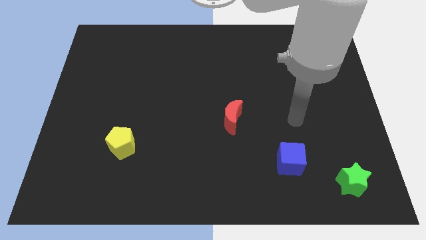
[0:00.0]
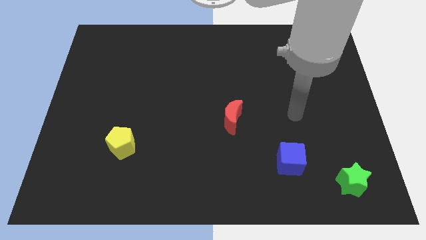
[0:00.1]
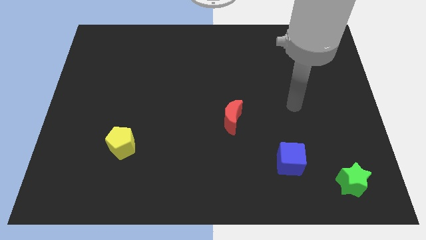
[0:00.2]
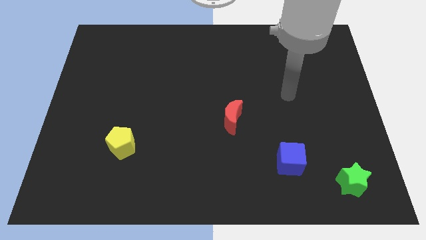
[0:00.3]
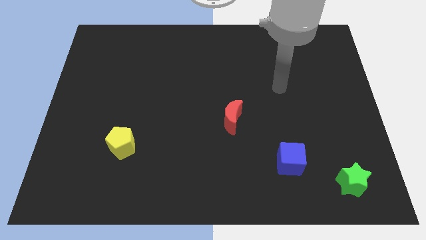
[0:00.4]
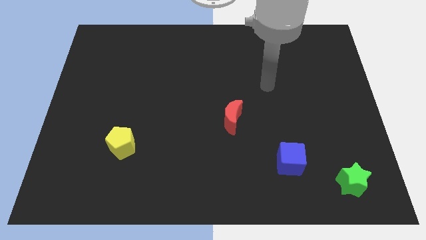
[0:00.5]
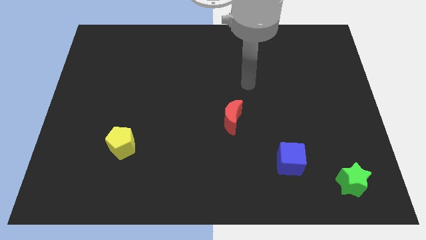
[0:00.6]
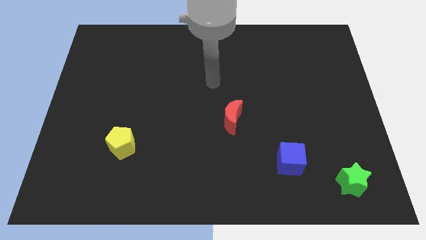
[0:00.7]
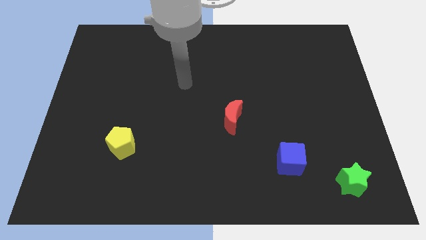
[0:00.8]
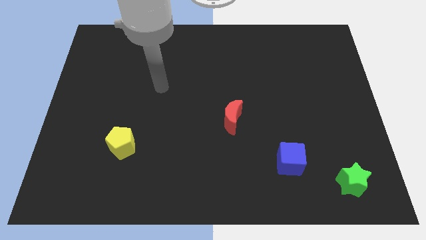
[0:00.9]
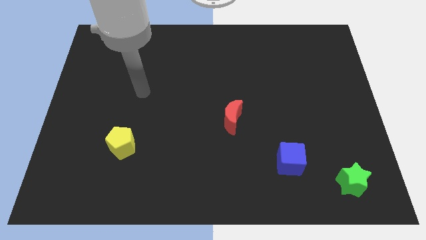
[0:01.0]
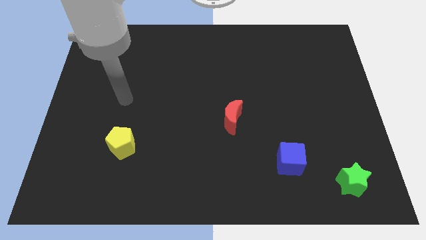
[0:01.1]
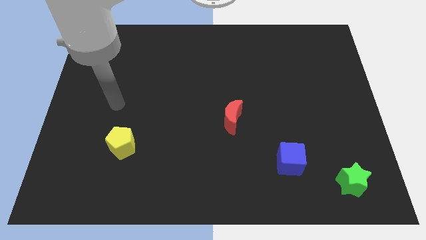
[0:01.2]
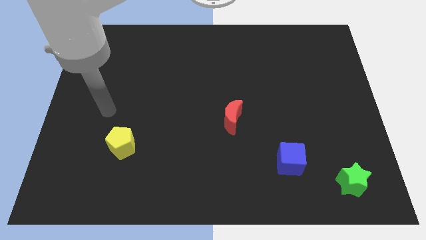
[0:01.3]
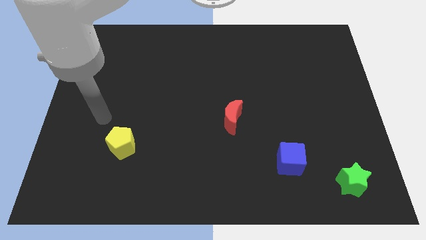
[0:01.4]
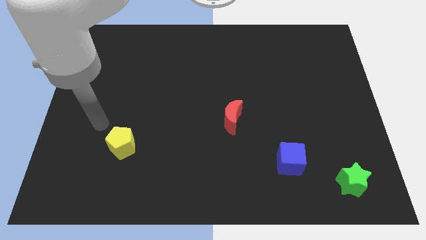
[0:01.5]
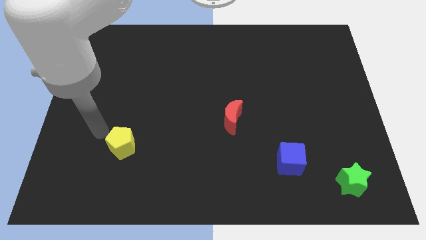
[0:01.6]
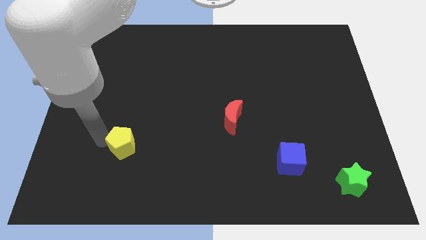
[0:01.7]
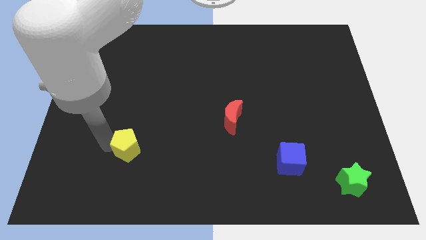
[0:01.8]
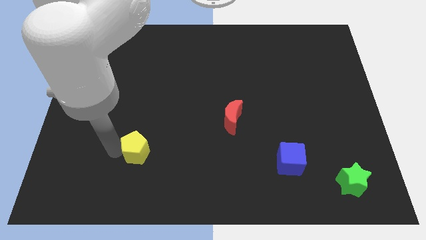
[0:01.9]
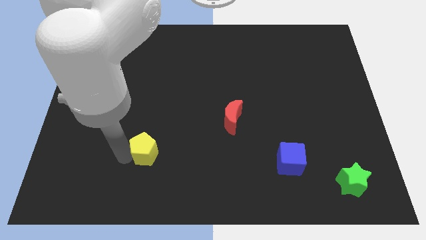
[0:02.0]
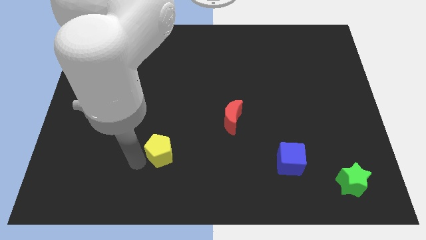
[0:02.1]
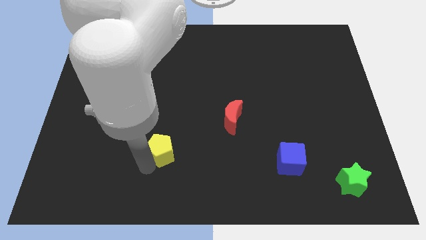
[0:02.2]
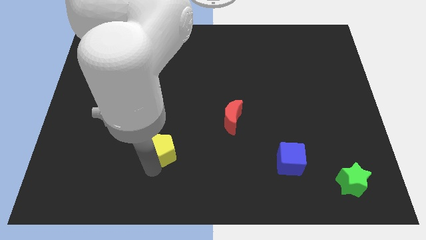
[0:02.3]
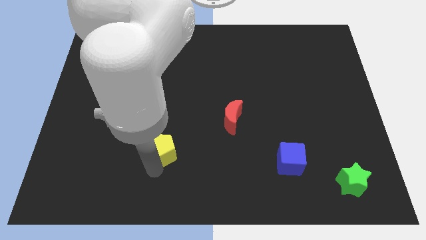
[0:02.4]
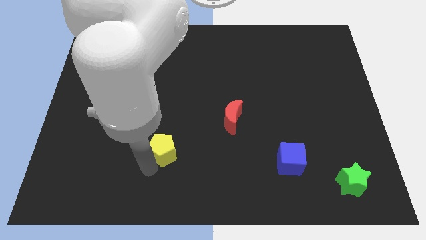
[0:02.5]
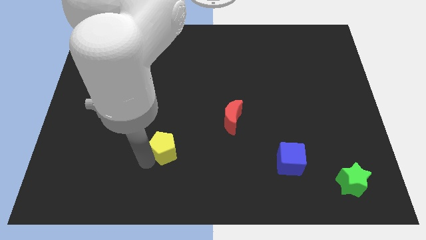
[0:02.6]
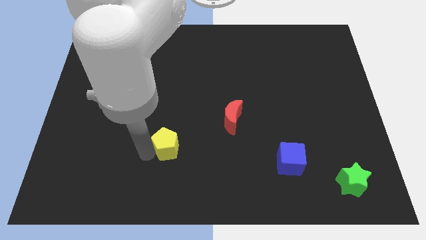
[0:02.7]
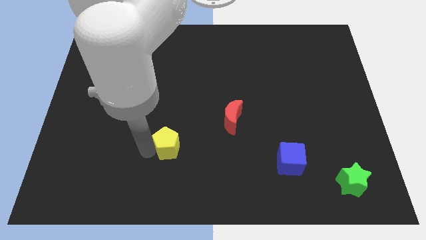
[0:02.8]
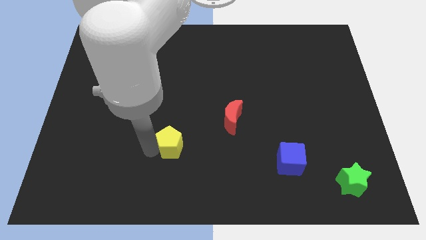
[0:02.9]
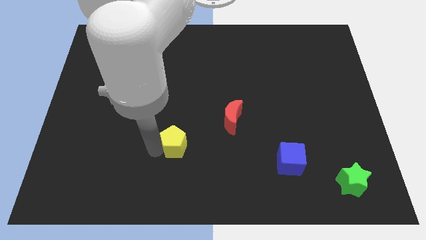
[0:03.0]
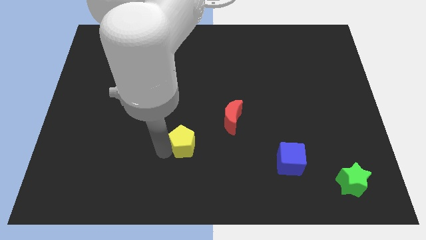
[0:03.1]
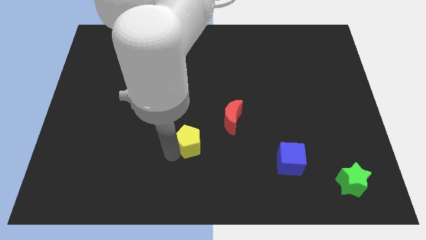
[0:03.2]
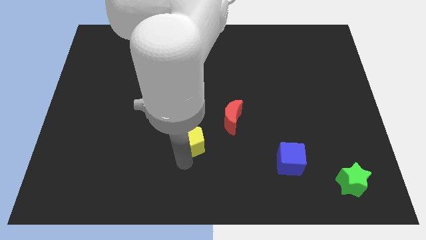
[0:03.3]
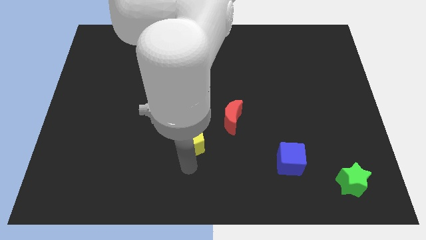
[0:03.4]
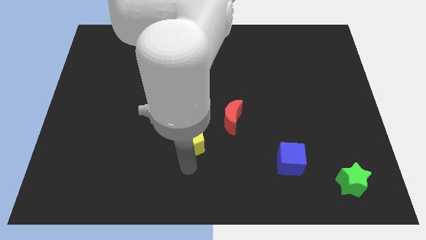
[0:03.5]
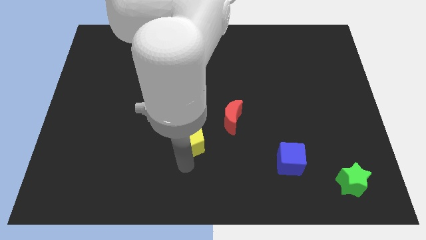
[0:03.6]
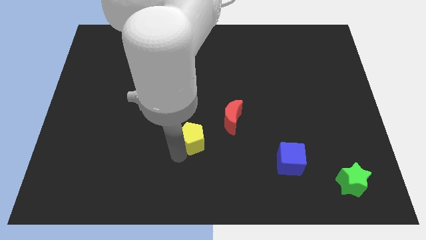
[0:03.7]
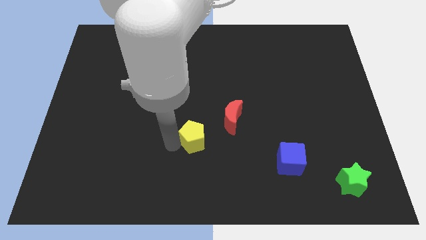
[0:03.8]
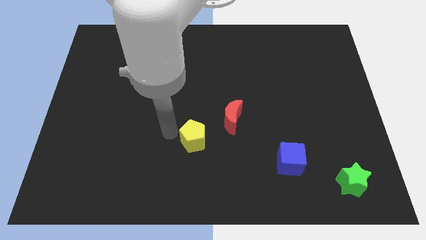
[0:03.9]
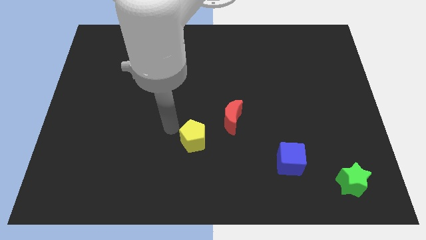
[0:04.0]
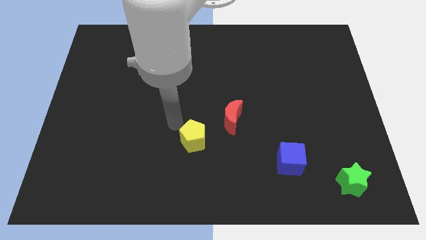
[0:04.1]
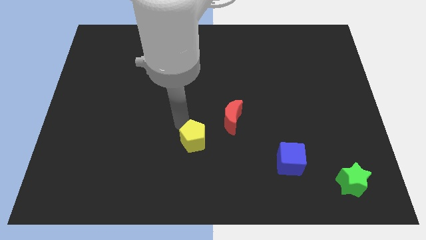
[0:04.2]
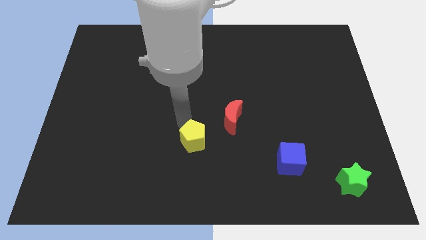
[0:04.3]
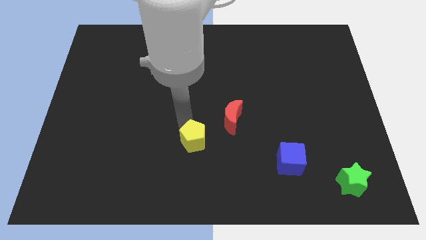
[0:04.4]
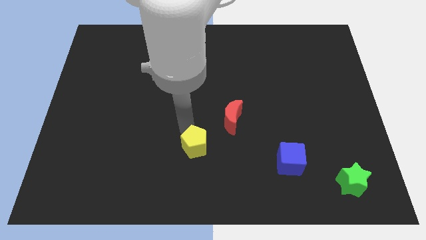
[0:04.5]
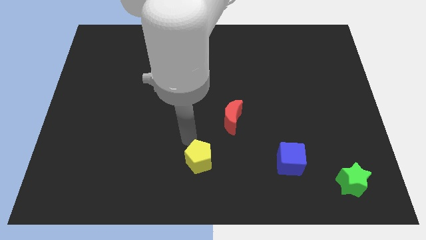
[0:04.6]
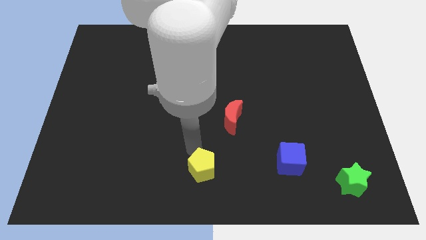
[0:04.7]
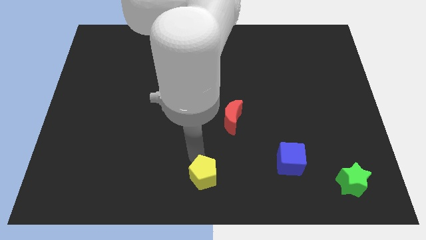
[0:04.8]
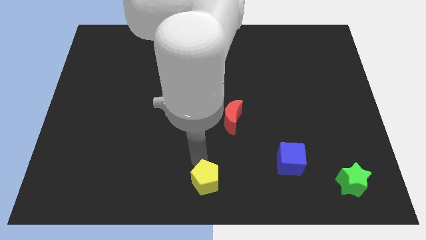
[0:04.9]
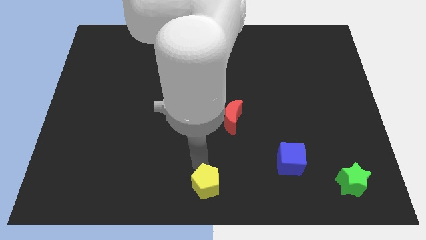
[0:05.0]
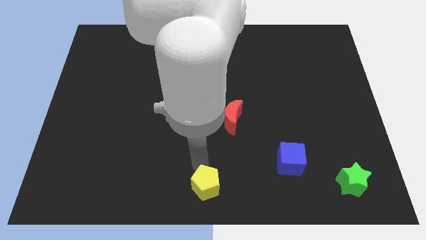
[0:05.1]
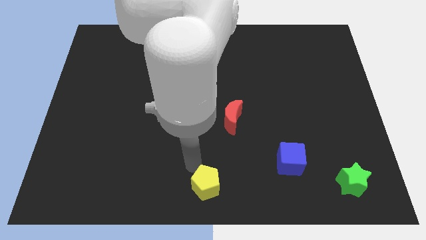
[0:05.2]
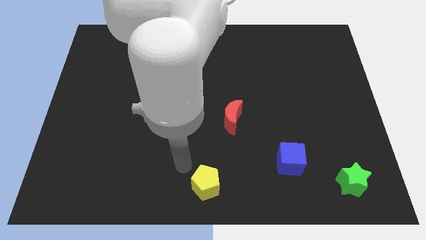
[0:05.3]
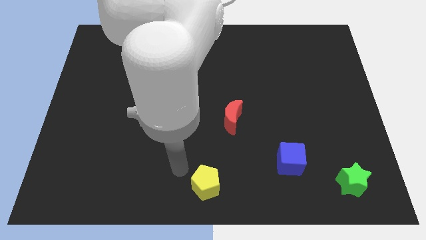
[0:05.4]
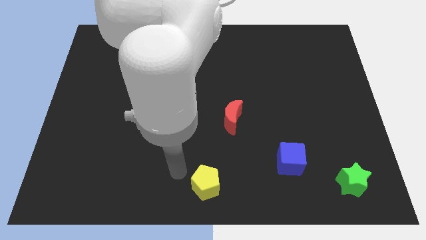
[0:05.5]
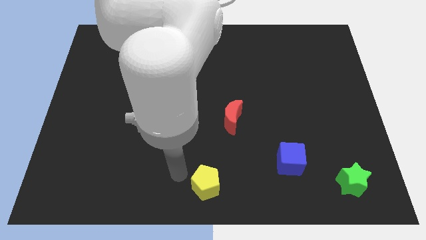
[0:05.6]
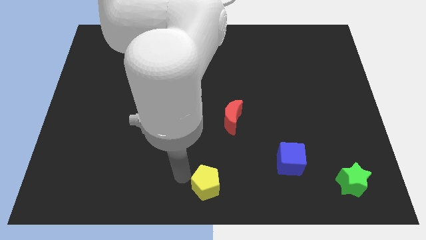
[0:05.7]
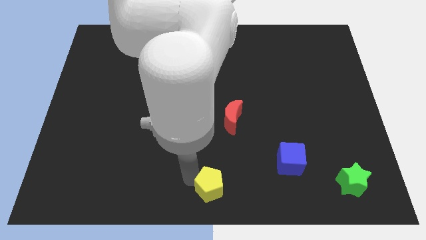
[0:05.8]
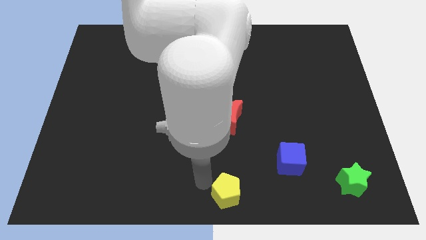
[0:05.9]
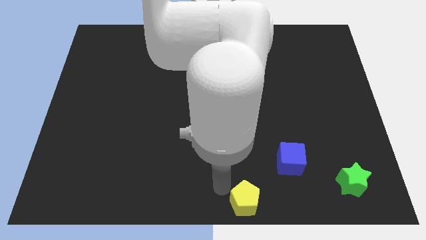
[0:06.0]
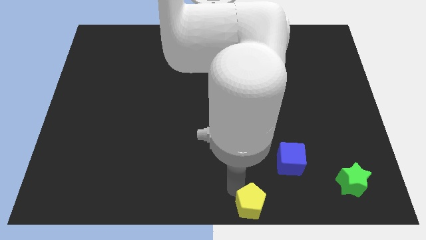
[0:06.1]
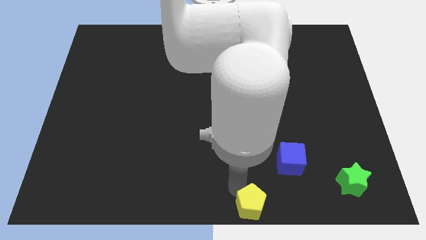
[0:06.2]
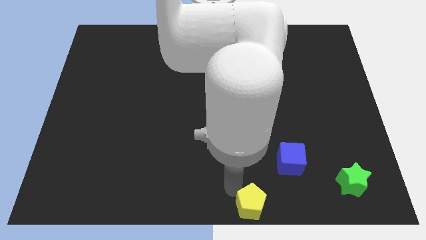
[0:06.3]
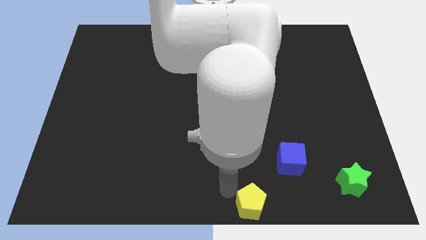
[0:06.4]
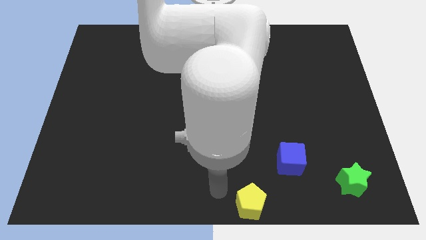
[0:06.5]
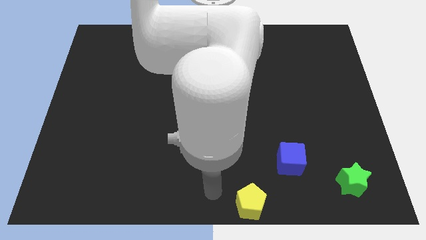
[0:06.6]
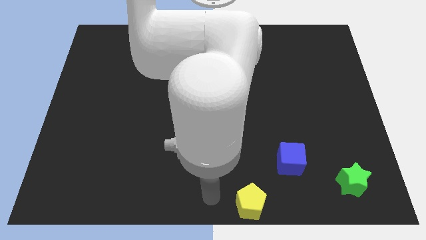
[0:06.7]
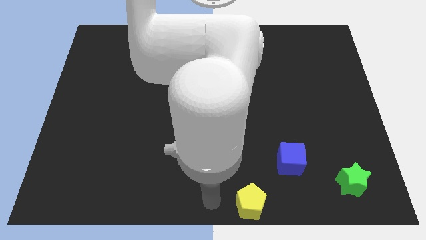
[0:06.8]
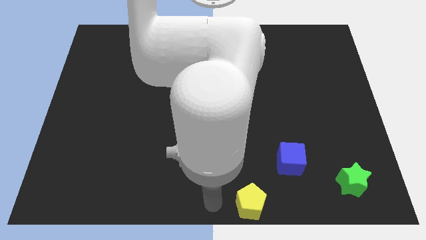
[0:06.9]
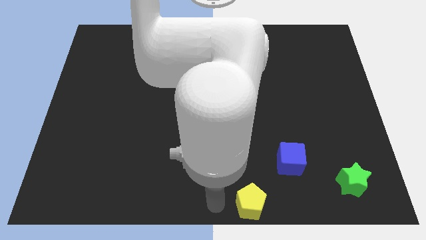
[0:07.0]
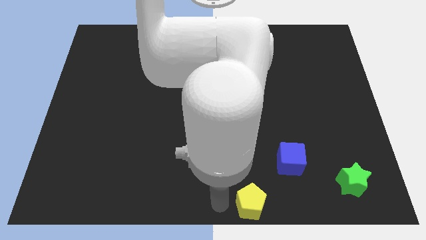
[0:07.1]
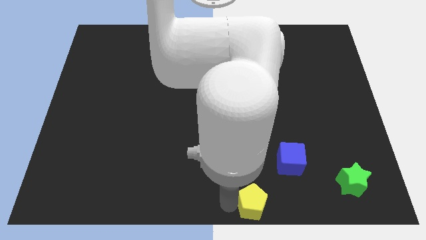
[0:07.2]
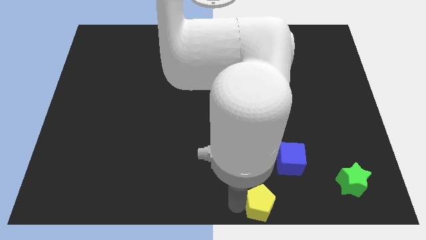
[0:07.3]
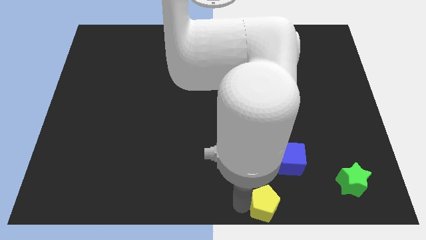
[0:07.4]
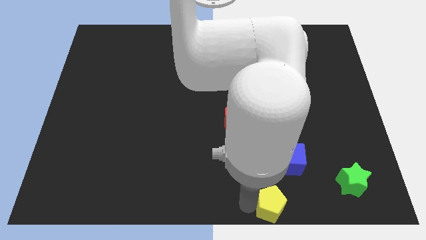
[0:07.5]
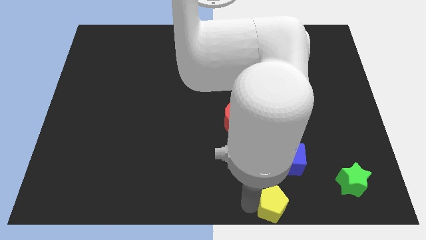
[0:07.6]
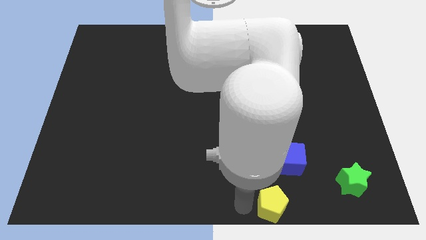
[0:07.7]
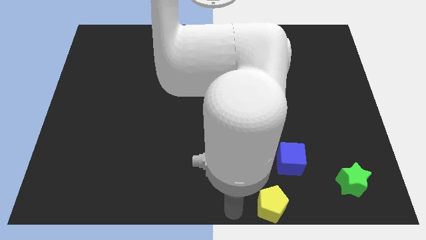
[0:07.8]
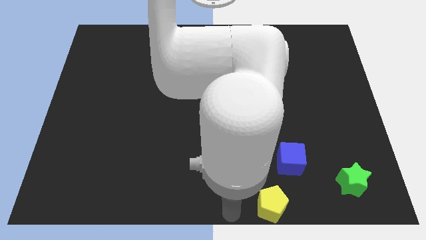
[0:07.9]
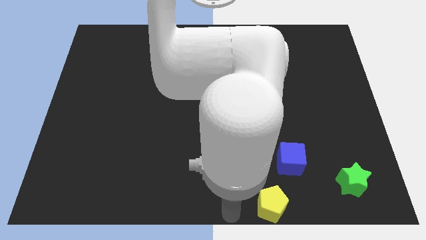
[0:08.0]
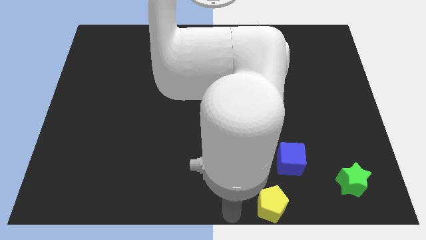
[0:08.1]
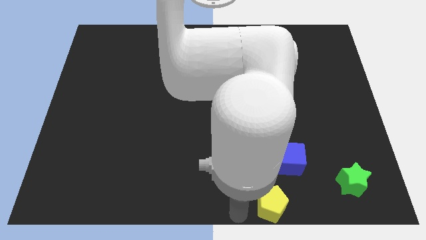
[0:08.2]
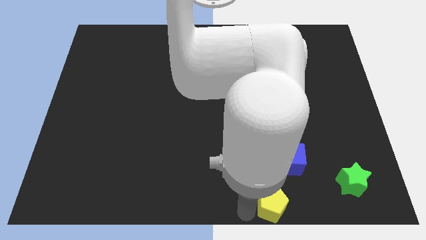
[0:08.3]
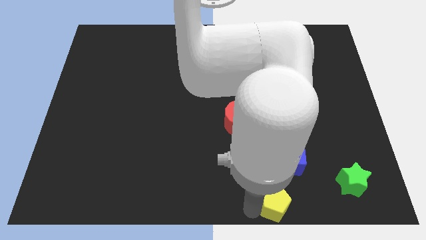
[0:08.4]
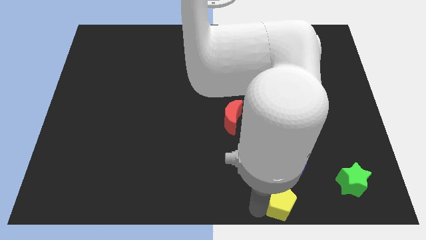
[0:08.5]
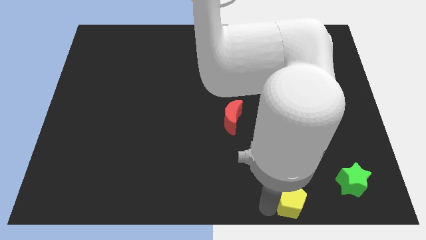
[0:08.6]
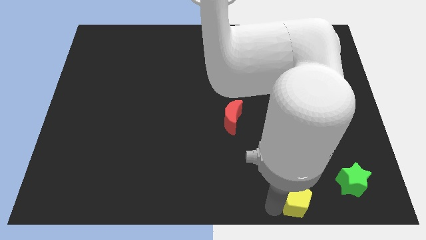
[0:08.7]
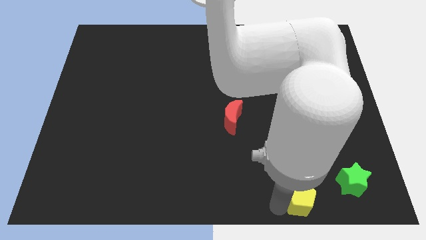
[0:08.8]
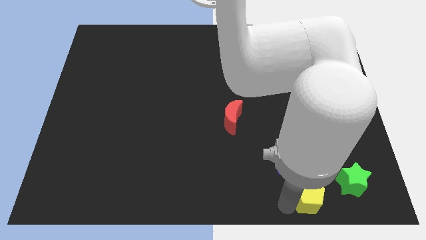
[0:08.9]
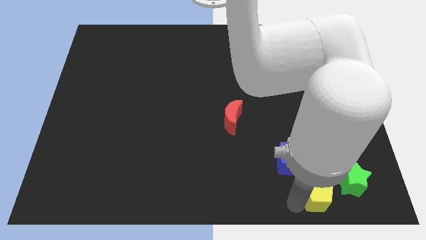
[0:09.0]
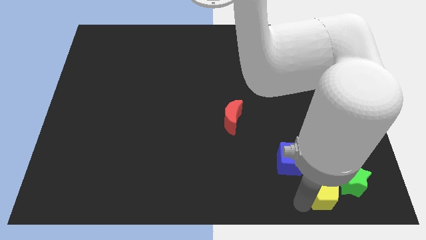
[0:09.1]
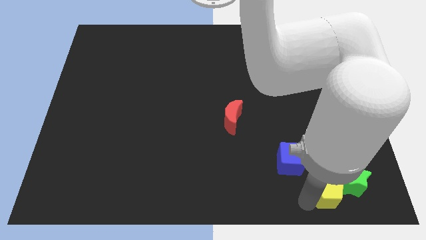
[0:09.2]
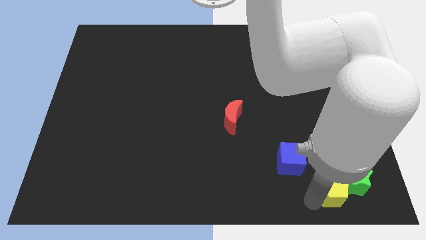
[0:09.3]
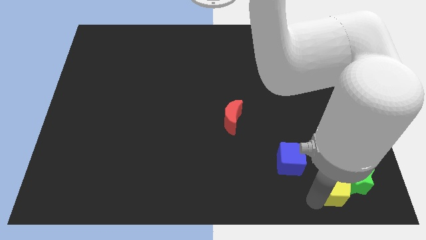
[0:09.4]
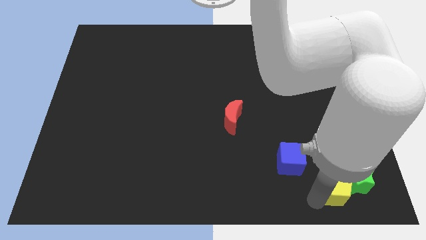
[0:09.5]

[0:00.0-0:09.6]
move the pentagon close to the star
